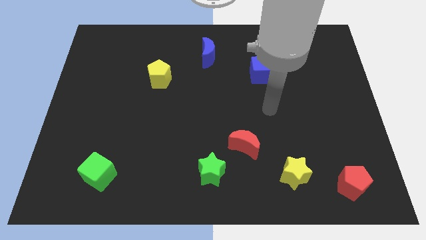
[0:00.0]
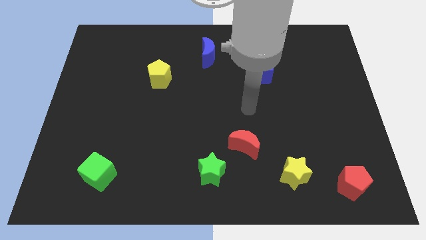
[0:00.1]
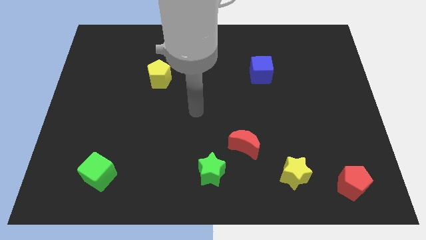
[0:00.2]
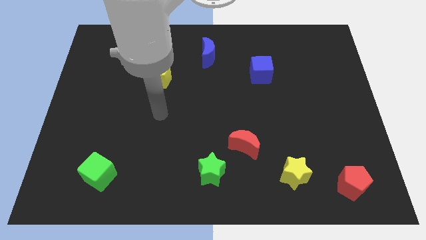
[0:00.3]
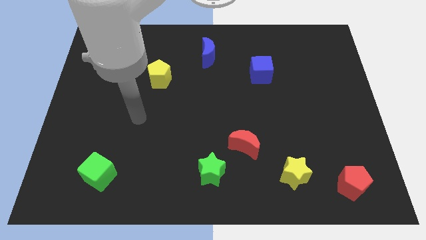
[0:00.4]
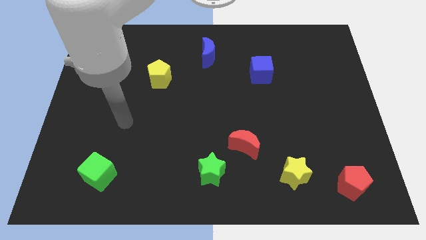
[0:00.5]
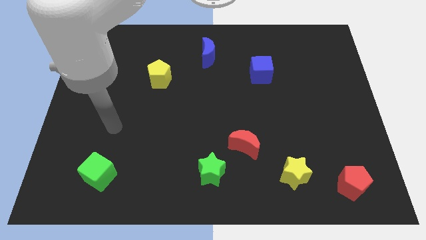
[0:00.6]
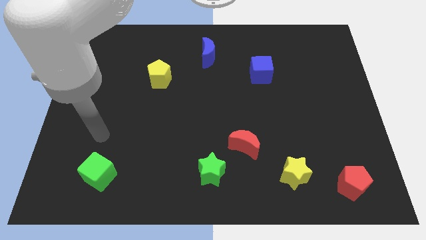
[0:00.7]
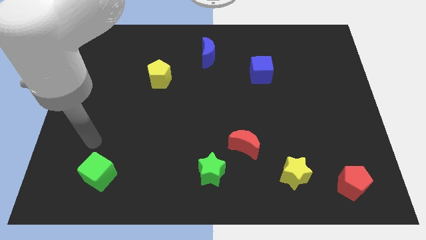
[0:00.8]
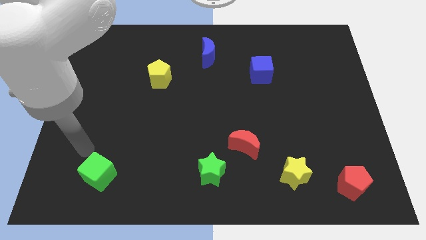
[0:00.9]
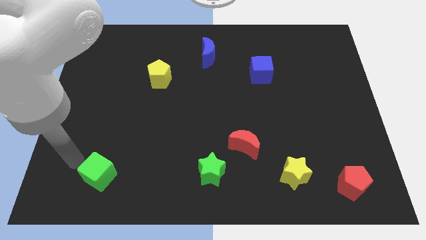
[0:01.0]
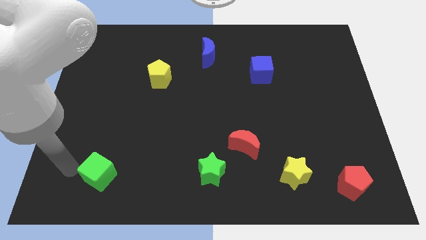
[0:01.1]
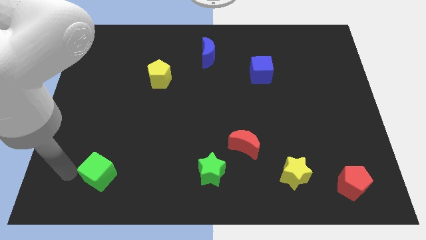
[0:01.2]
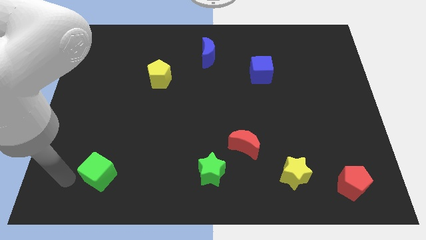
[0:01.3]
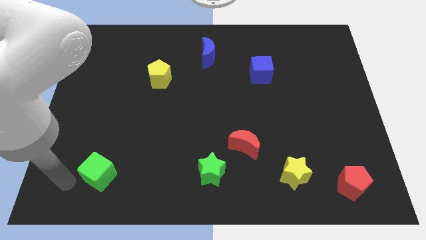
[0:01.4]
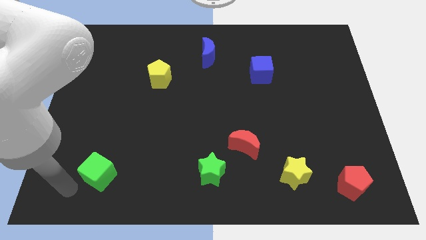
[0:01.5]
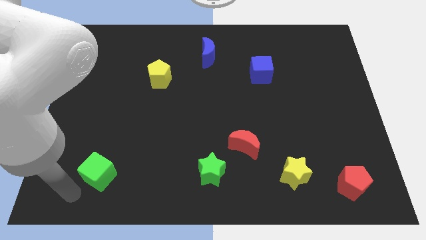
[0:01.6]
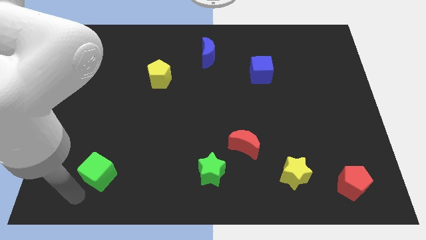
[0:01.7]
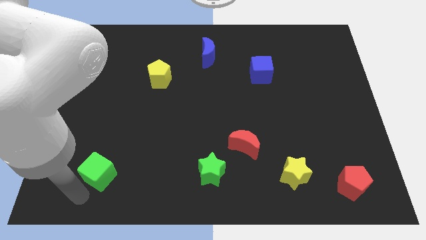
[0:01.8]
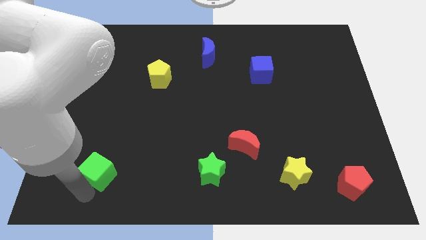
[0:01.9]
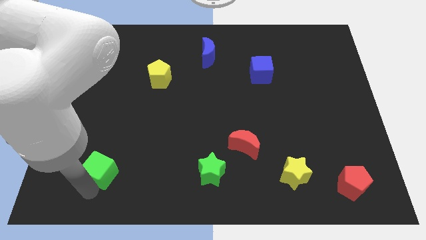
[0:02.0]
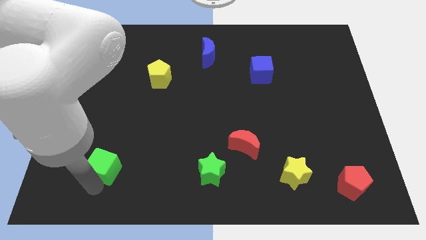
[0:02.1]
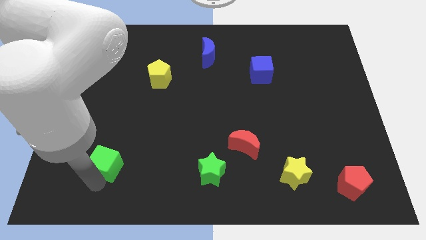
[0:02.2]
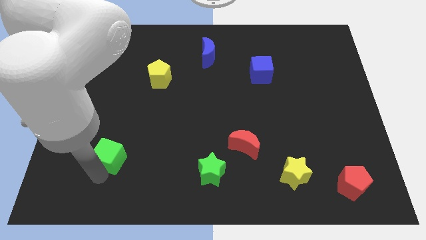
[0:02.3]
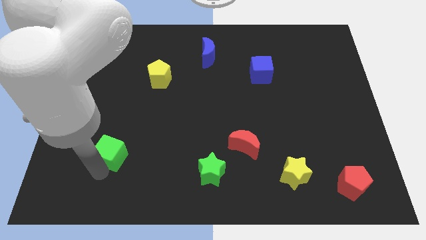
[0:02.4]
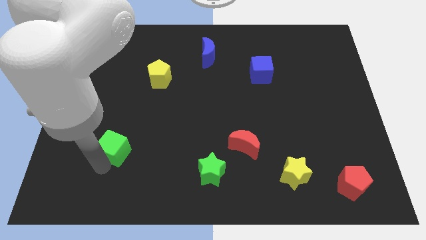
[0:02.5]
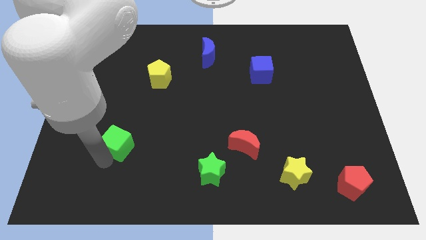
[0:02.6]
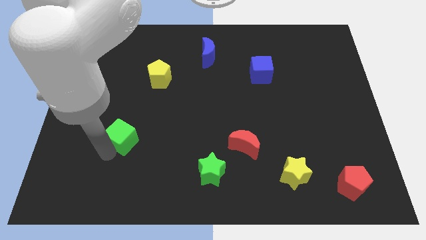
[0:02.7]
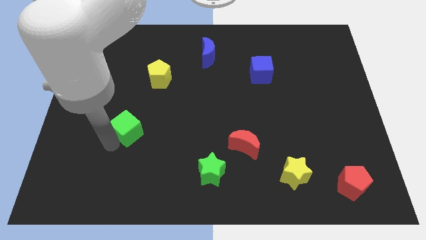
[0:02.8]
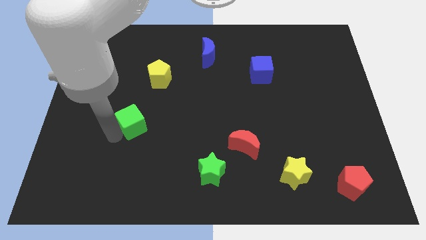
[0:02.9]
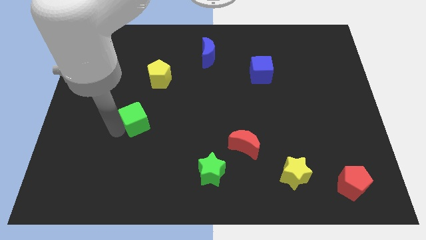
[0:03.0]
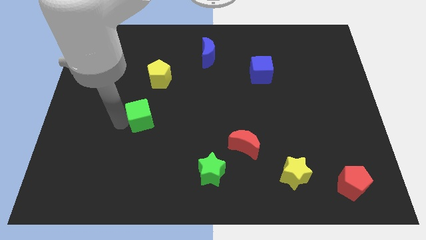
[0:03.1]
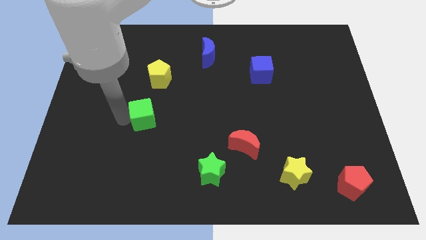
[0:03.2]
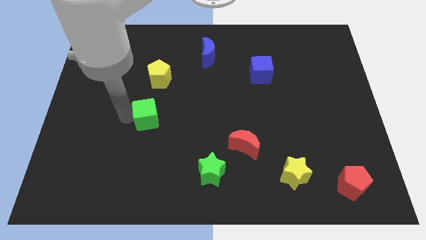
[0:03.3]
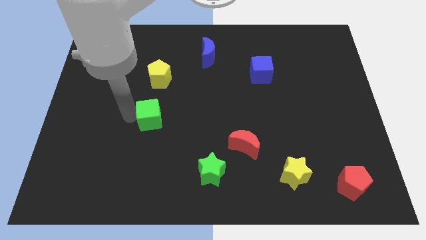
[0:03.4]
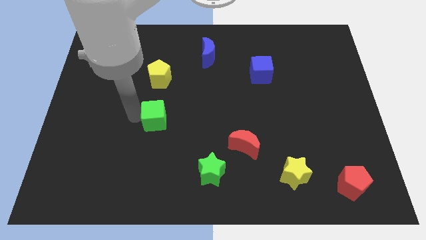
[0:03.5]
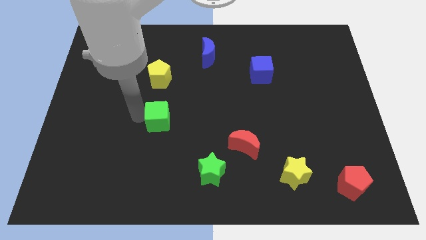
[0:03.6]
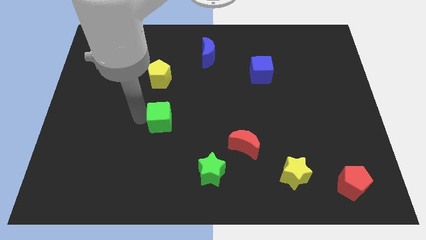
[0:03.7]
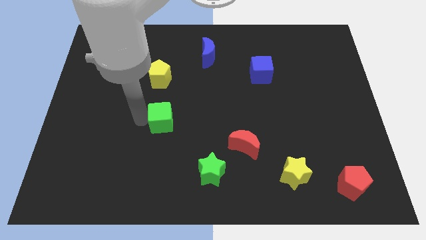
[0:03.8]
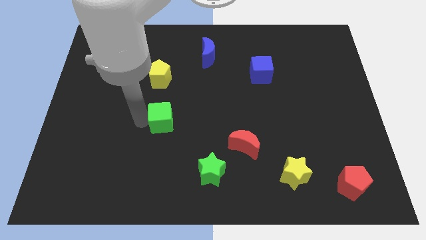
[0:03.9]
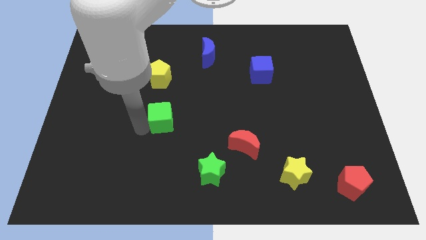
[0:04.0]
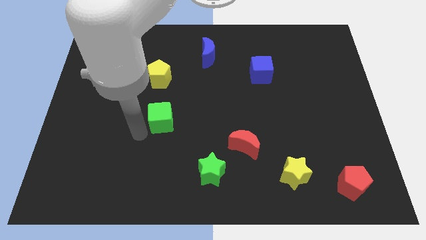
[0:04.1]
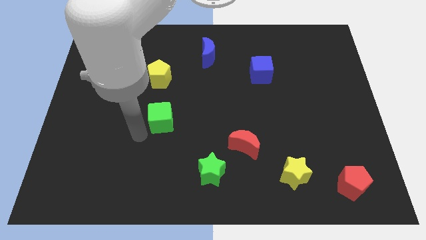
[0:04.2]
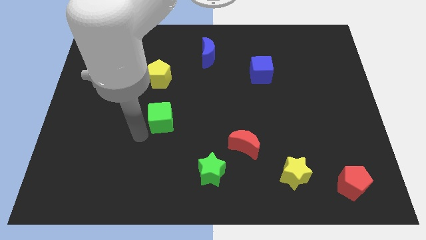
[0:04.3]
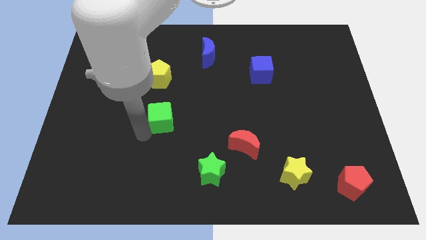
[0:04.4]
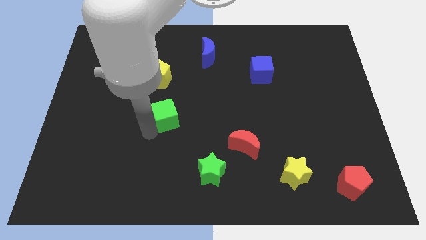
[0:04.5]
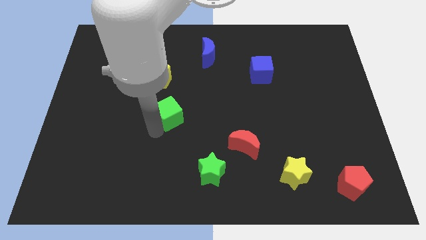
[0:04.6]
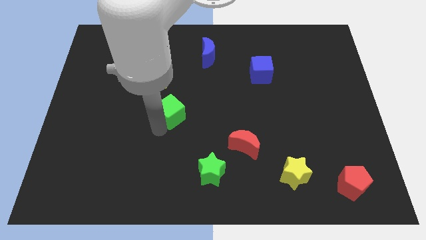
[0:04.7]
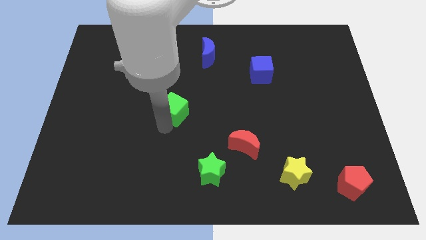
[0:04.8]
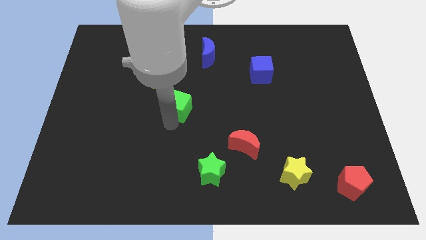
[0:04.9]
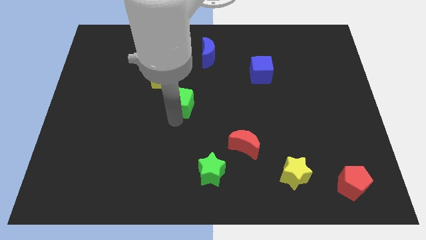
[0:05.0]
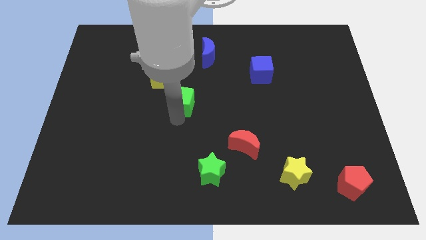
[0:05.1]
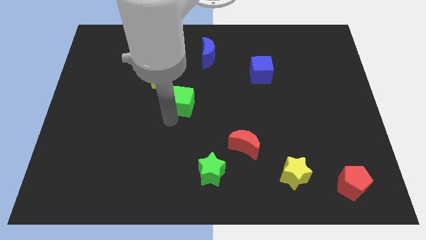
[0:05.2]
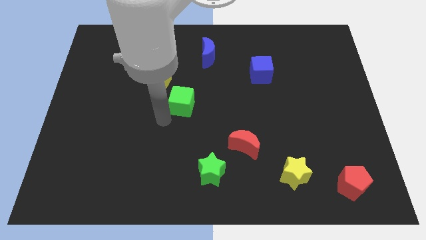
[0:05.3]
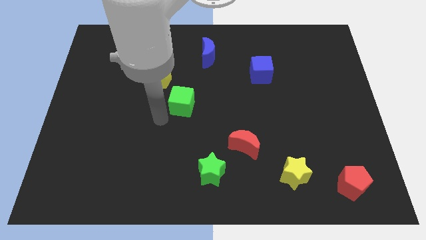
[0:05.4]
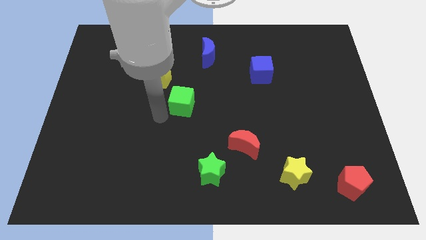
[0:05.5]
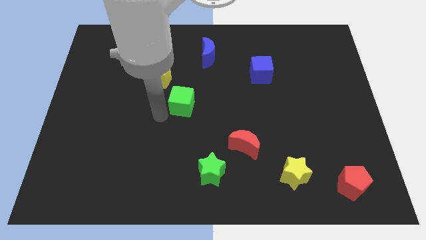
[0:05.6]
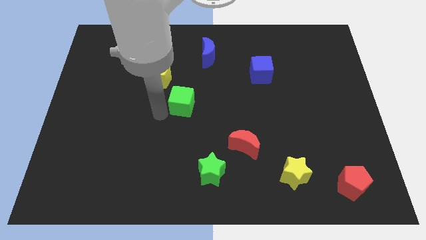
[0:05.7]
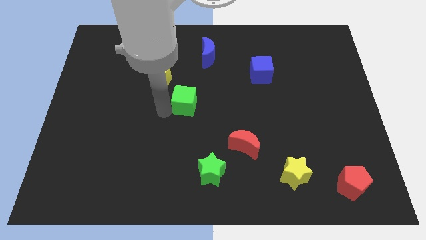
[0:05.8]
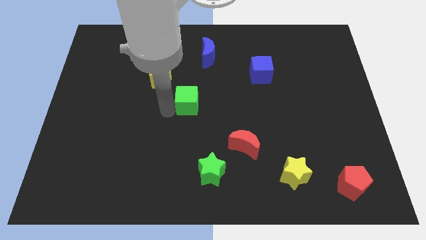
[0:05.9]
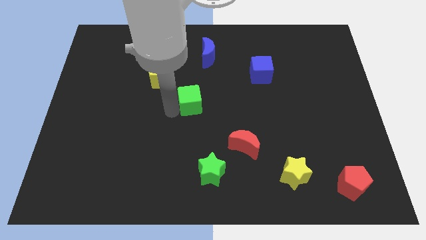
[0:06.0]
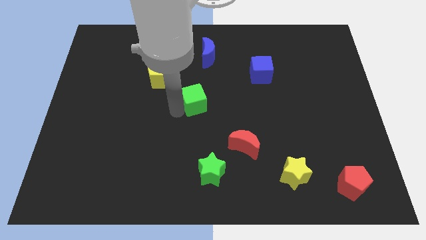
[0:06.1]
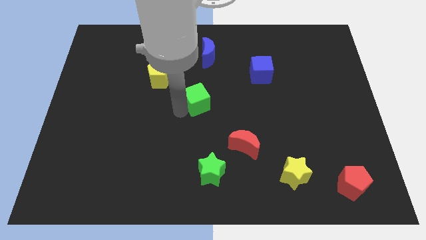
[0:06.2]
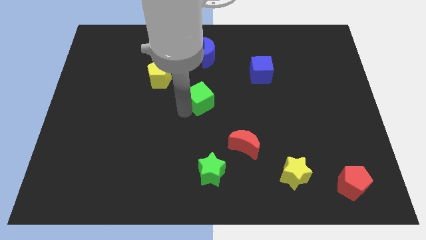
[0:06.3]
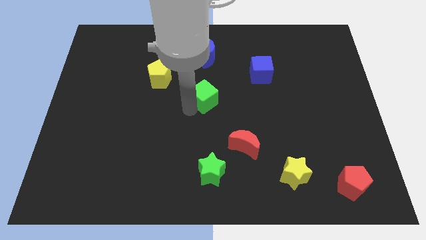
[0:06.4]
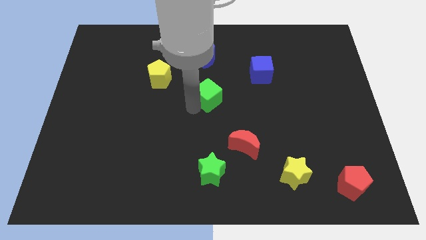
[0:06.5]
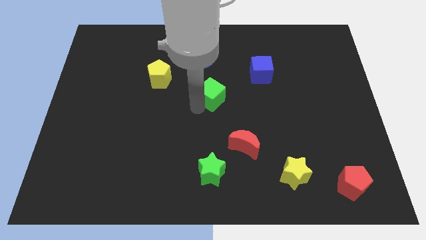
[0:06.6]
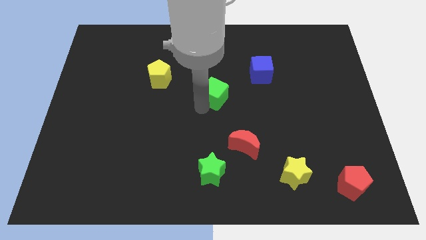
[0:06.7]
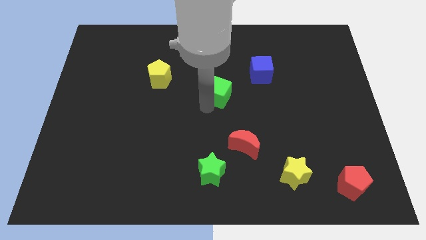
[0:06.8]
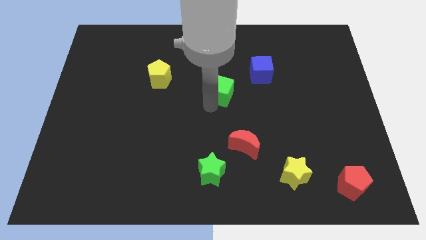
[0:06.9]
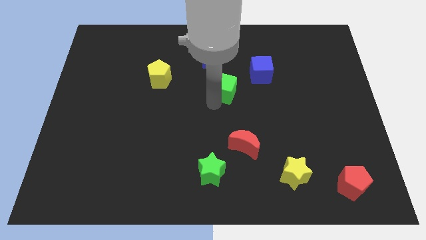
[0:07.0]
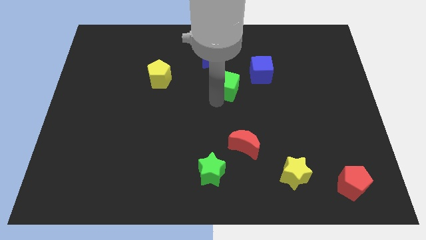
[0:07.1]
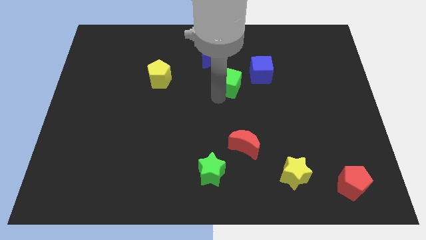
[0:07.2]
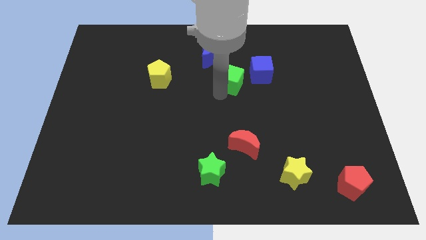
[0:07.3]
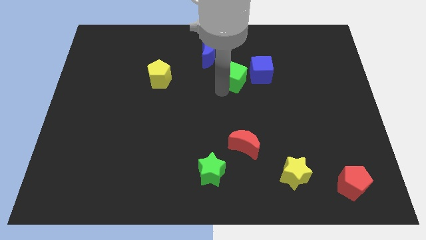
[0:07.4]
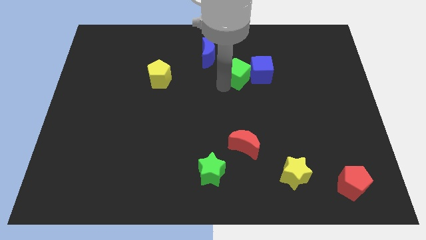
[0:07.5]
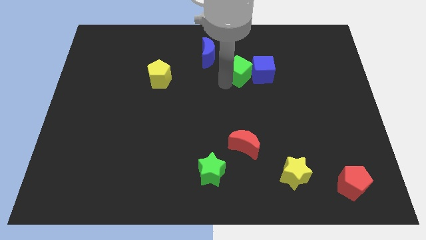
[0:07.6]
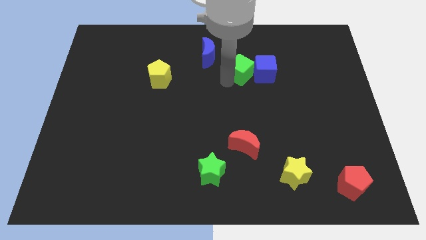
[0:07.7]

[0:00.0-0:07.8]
put the green cube next to the blue cube

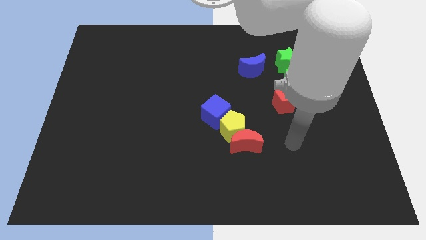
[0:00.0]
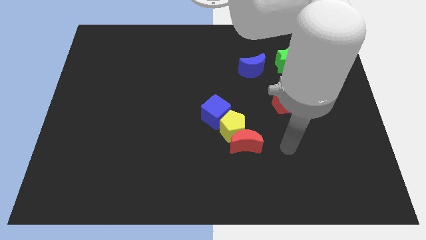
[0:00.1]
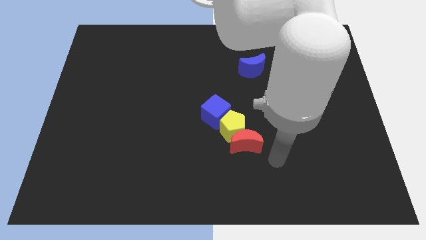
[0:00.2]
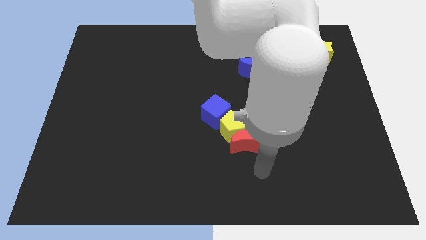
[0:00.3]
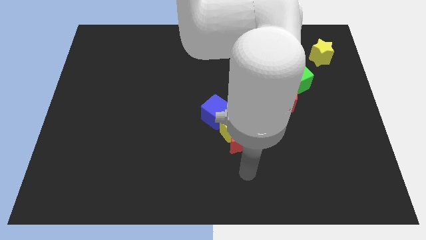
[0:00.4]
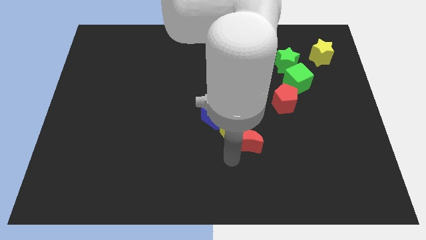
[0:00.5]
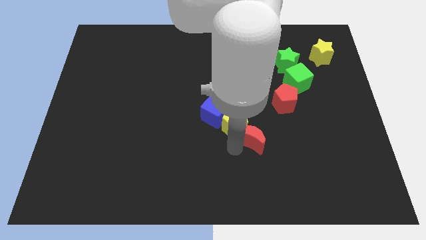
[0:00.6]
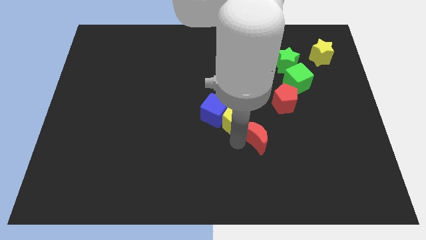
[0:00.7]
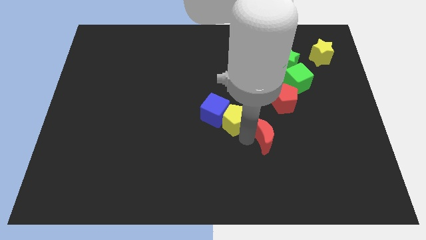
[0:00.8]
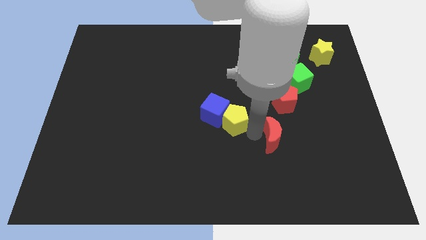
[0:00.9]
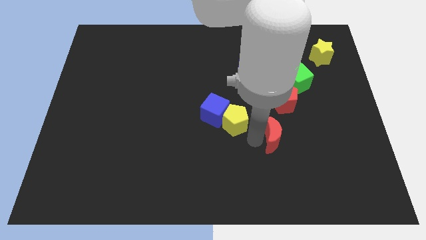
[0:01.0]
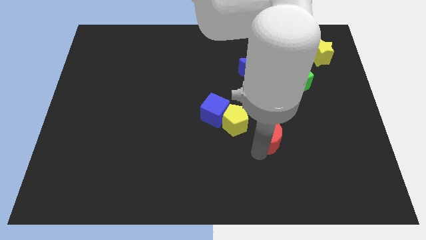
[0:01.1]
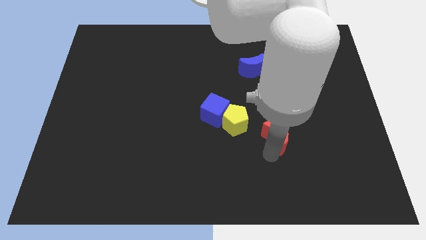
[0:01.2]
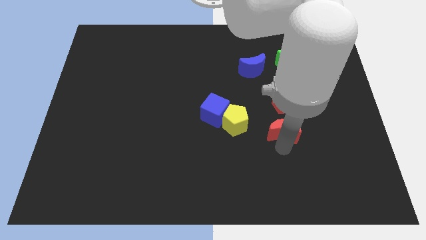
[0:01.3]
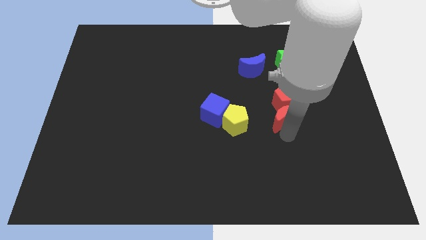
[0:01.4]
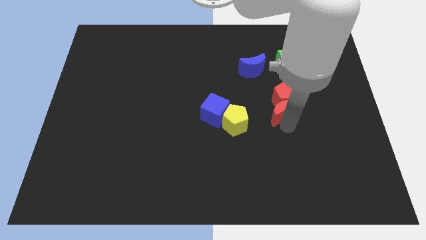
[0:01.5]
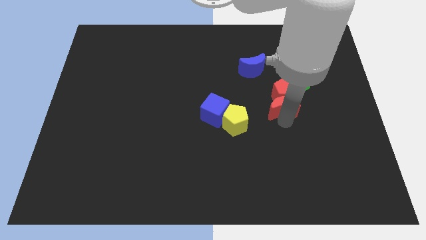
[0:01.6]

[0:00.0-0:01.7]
slide the red moon next to the red pentagon
